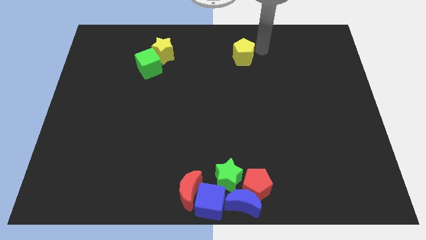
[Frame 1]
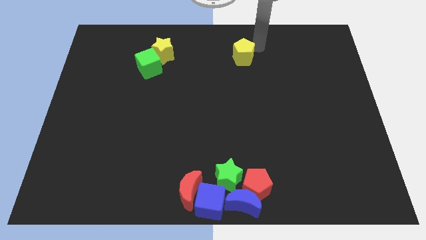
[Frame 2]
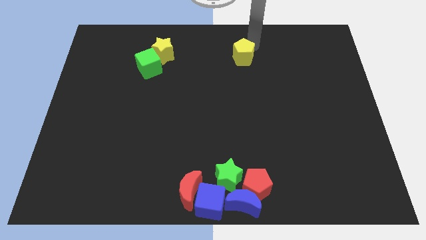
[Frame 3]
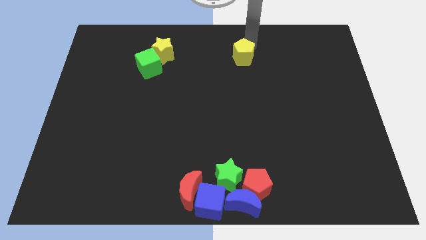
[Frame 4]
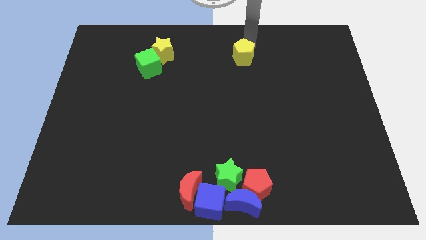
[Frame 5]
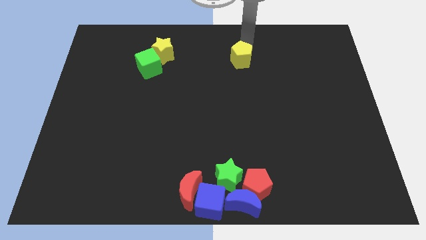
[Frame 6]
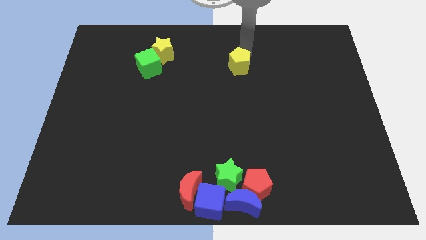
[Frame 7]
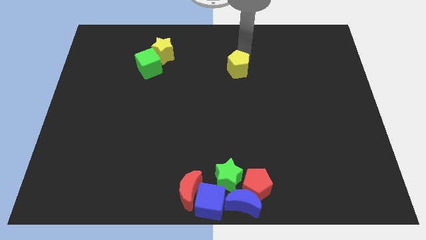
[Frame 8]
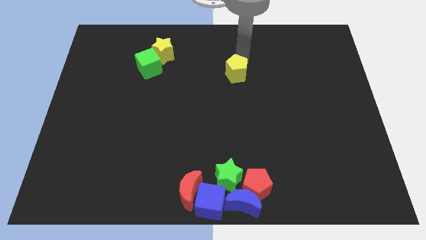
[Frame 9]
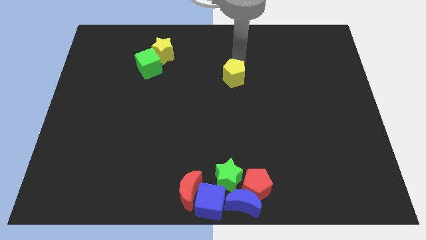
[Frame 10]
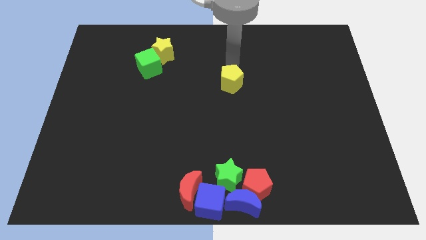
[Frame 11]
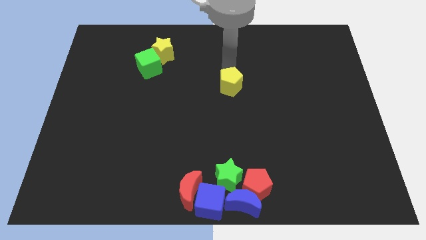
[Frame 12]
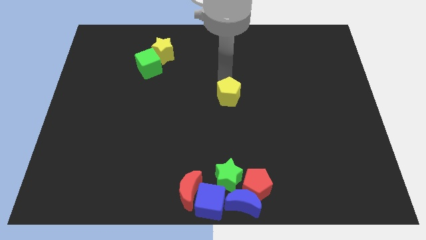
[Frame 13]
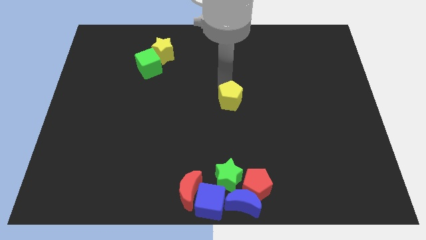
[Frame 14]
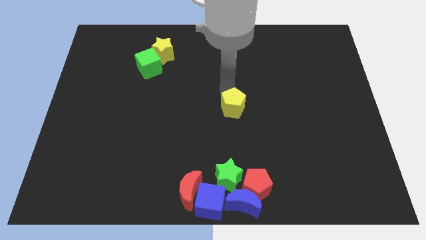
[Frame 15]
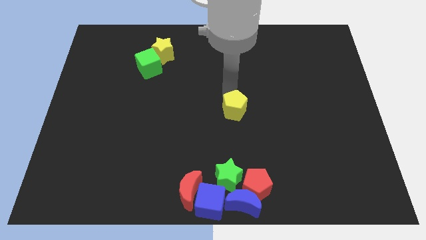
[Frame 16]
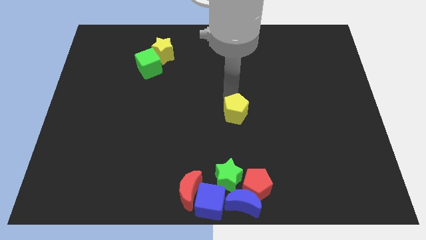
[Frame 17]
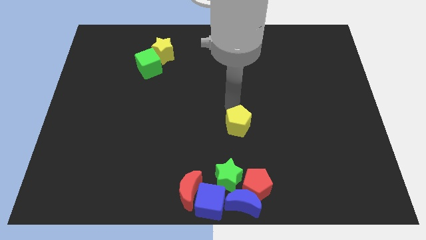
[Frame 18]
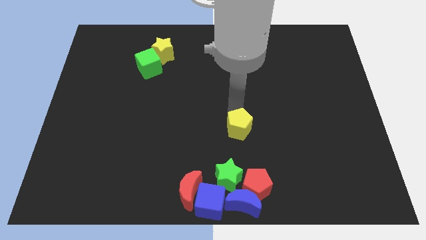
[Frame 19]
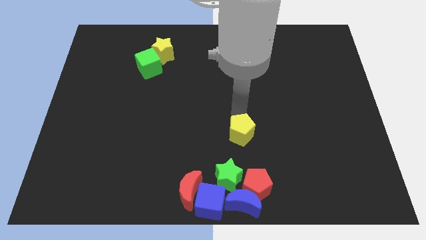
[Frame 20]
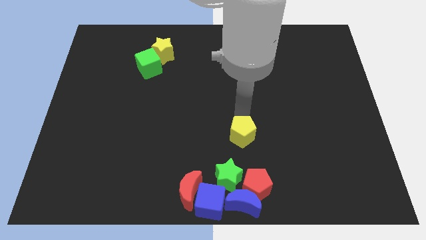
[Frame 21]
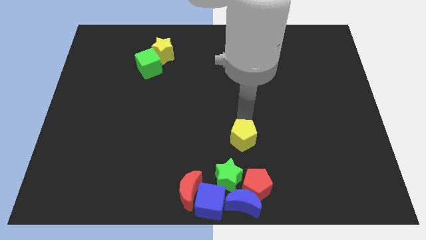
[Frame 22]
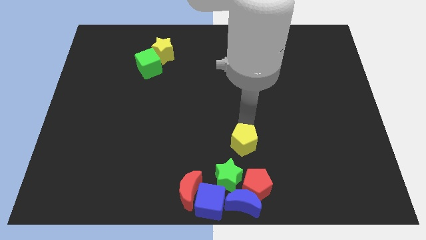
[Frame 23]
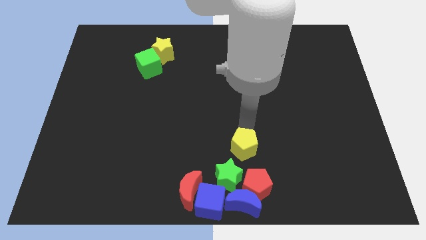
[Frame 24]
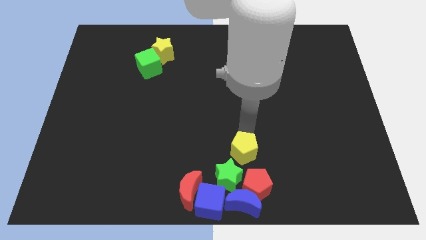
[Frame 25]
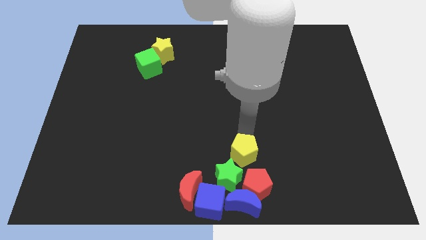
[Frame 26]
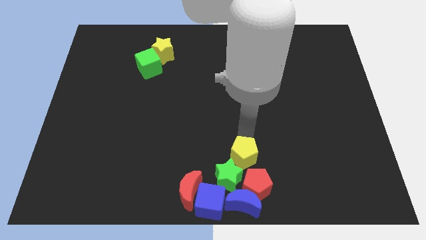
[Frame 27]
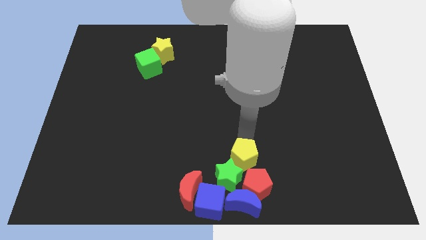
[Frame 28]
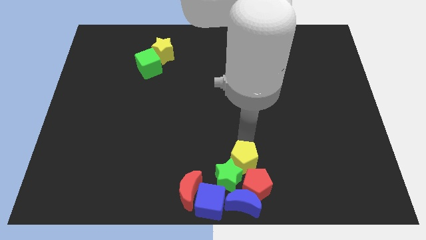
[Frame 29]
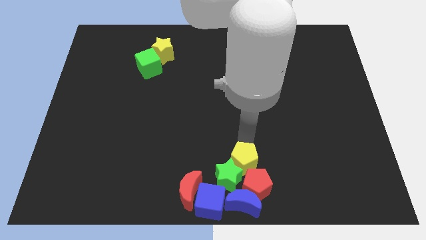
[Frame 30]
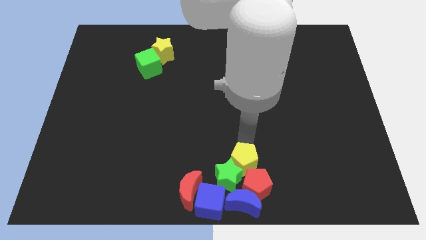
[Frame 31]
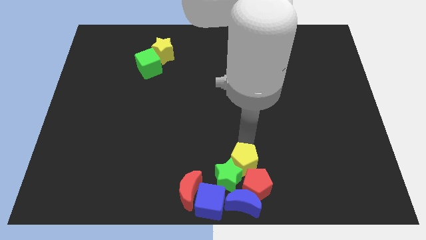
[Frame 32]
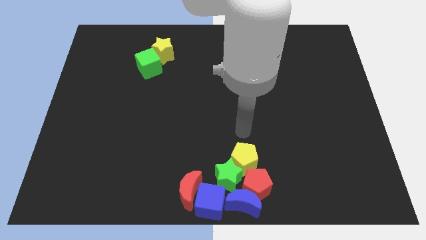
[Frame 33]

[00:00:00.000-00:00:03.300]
push the yellow pentagon on top of the green star

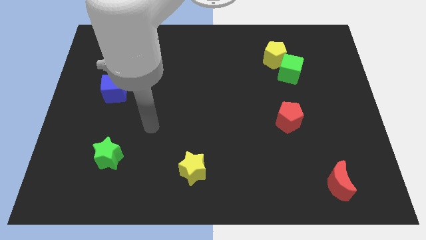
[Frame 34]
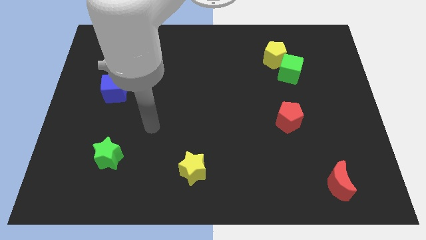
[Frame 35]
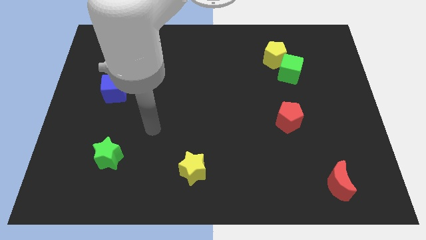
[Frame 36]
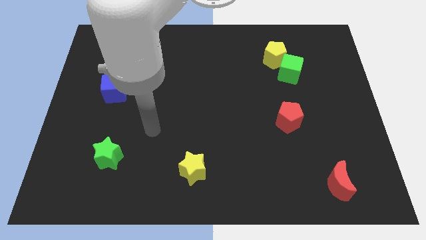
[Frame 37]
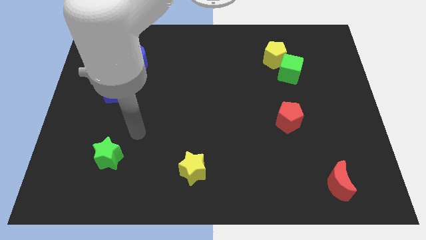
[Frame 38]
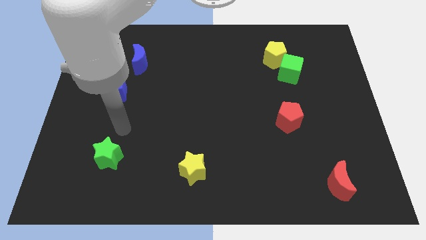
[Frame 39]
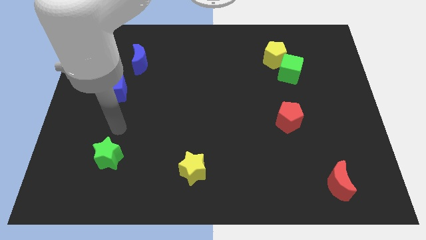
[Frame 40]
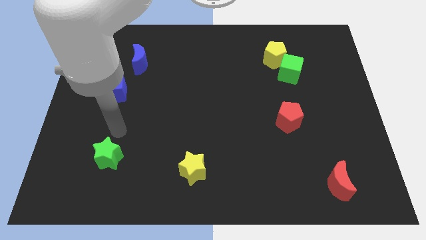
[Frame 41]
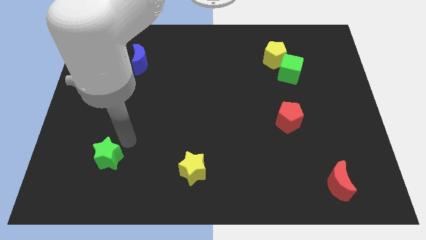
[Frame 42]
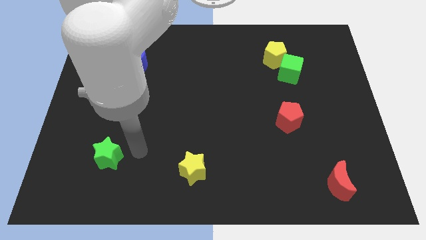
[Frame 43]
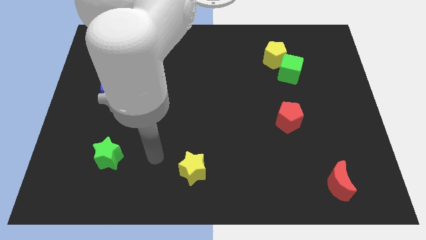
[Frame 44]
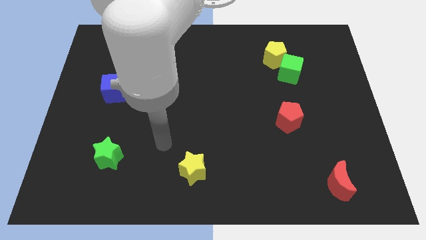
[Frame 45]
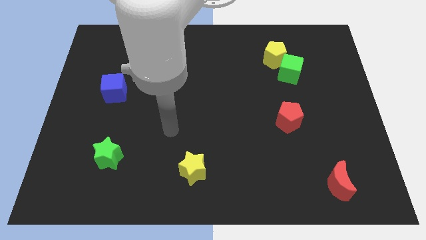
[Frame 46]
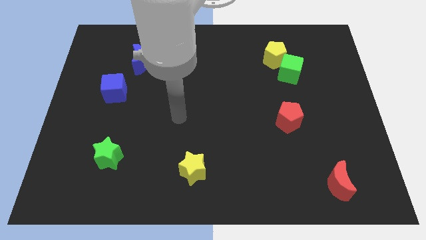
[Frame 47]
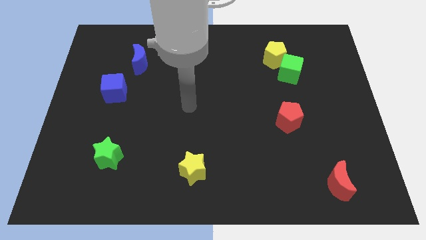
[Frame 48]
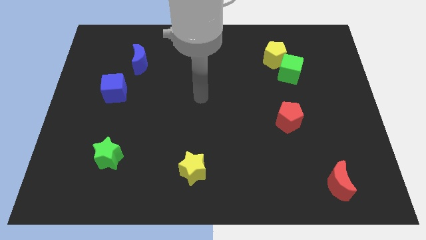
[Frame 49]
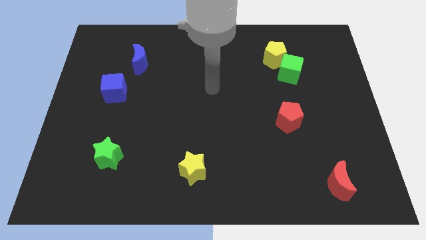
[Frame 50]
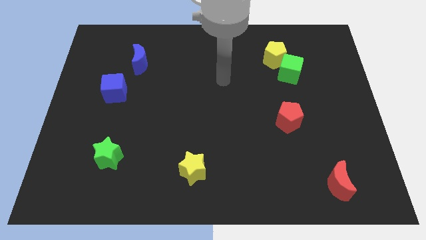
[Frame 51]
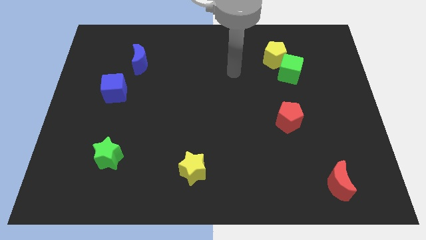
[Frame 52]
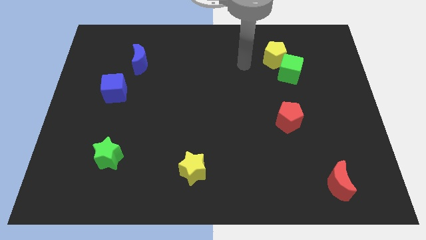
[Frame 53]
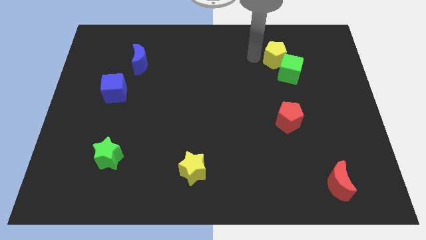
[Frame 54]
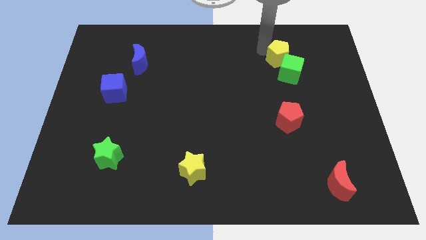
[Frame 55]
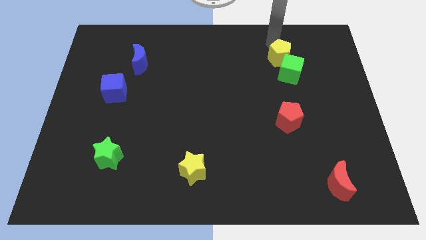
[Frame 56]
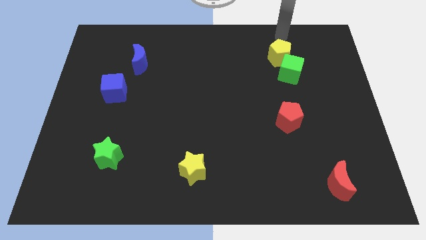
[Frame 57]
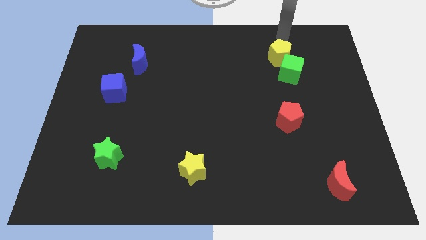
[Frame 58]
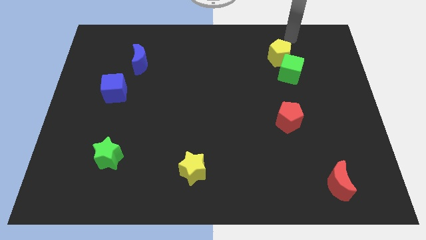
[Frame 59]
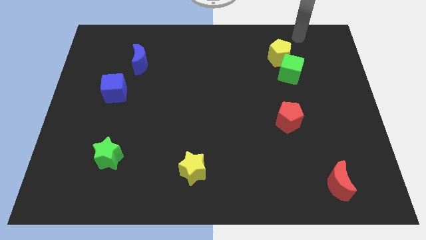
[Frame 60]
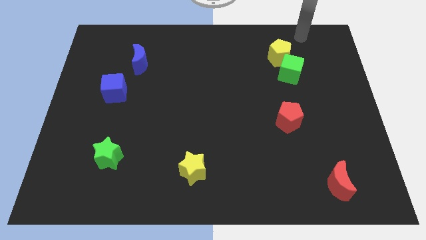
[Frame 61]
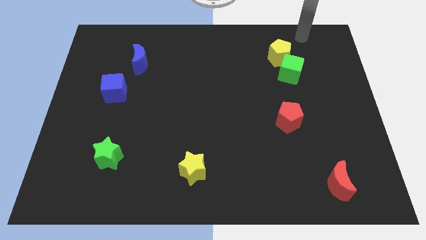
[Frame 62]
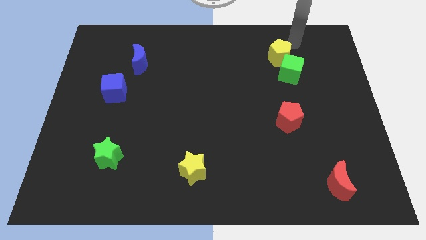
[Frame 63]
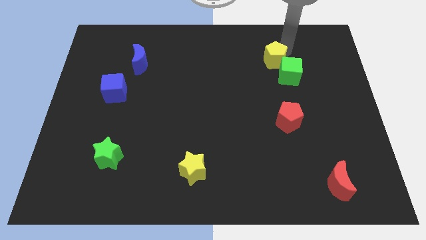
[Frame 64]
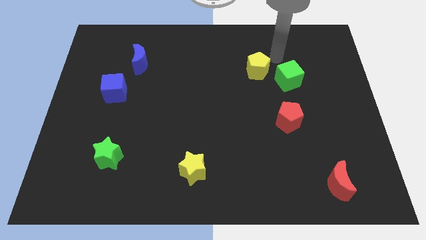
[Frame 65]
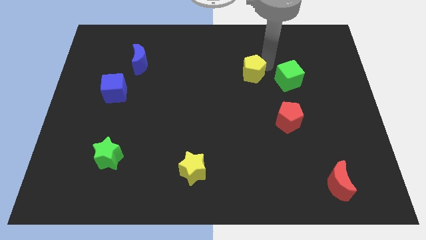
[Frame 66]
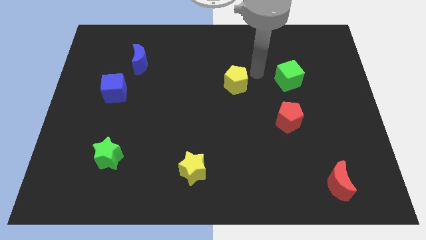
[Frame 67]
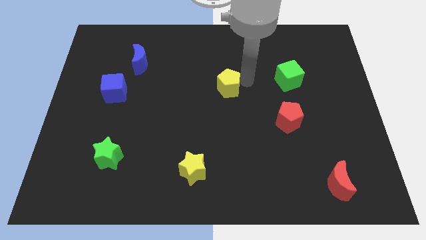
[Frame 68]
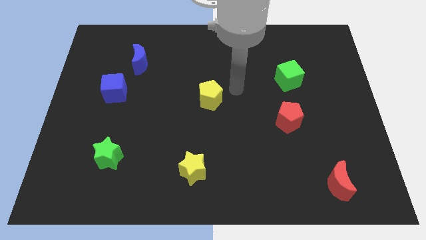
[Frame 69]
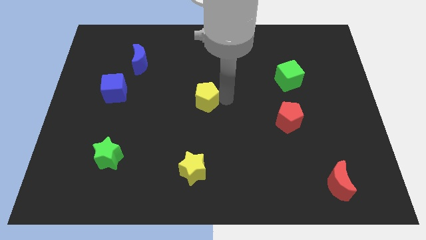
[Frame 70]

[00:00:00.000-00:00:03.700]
move the yellow pentagon away from the green cube

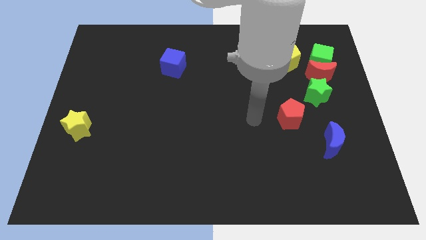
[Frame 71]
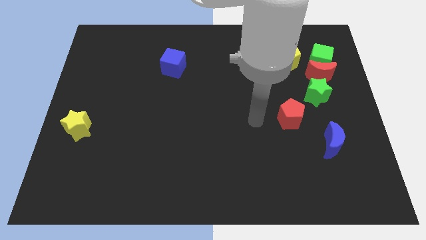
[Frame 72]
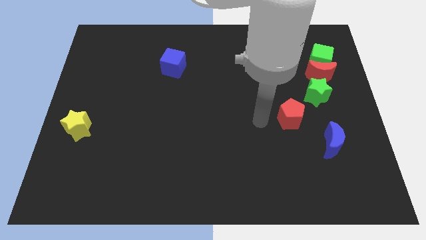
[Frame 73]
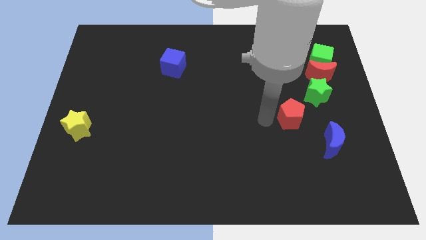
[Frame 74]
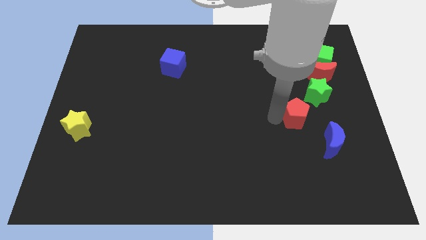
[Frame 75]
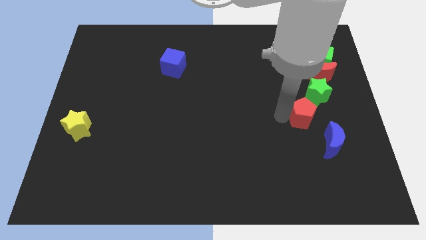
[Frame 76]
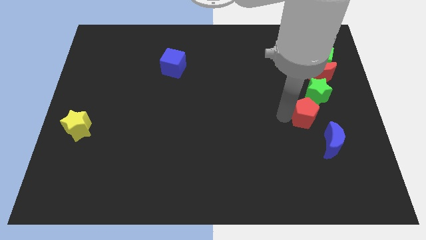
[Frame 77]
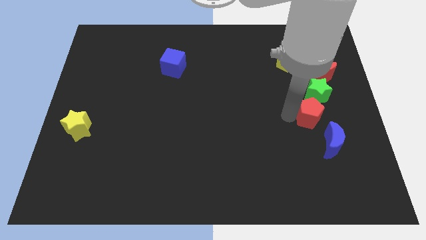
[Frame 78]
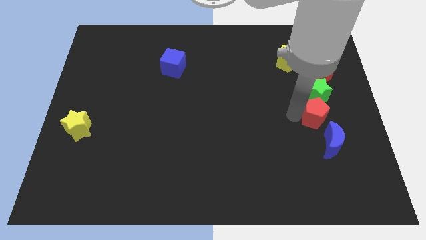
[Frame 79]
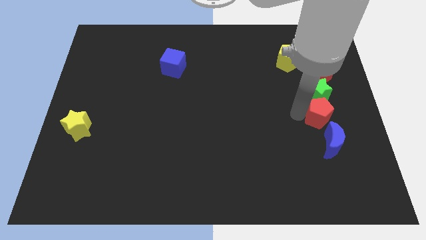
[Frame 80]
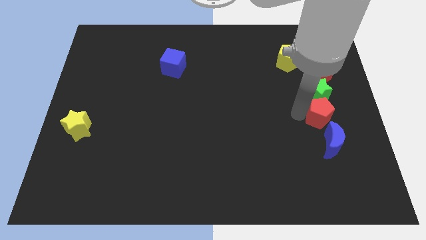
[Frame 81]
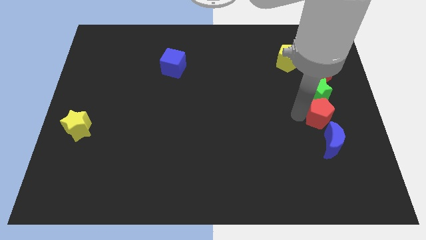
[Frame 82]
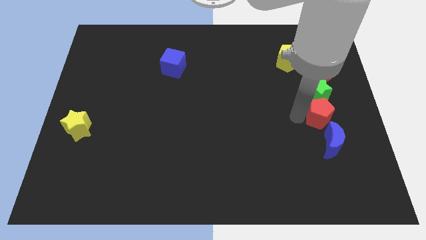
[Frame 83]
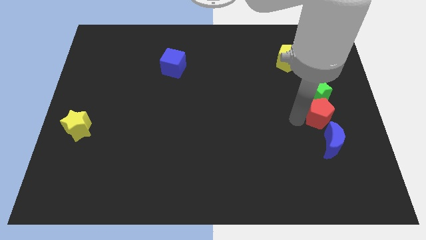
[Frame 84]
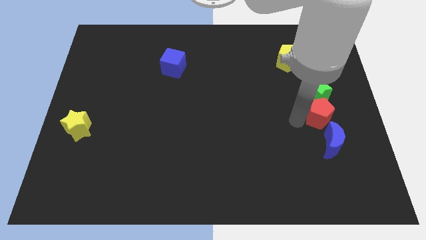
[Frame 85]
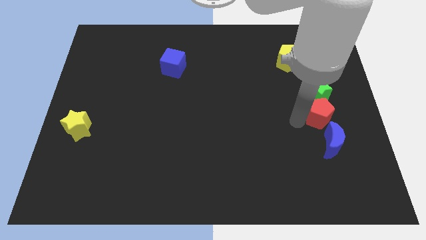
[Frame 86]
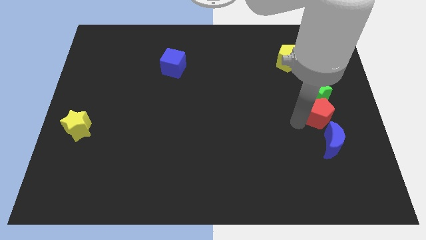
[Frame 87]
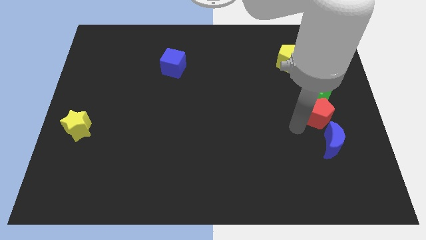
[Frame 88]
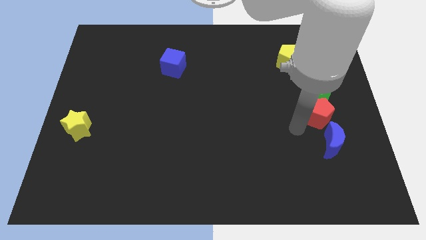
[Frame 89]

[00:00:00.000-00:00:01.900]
push the red pentagon in between green star and blue crescent
